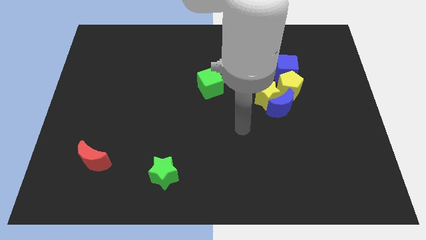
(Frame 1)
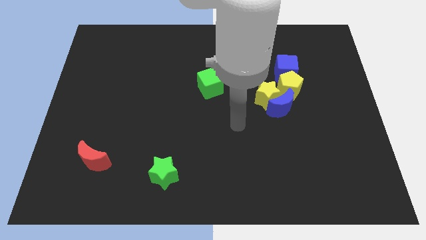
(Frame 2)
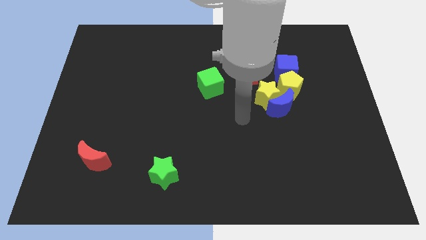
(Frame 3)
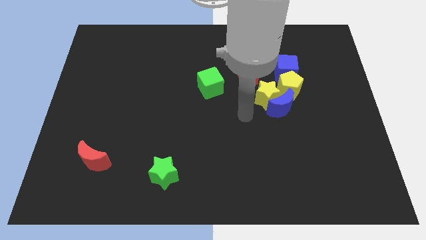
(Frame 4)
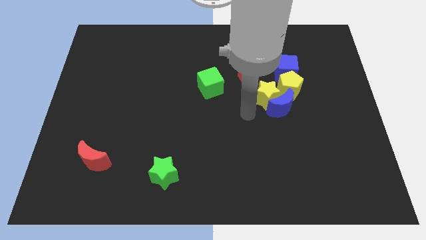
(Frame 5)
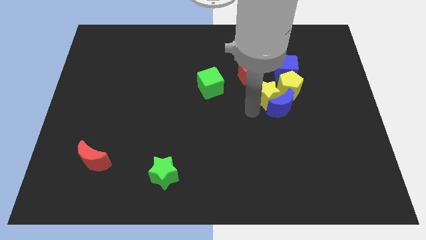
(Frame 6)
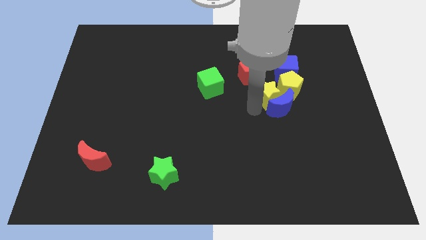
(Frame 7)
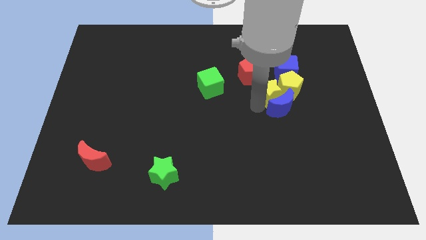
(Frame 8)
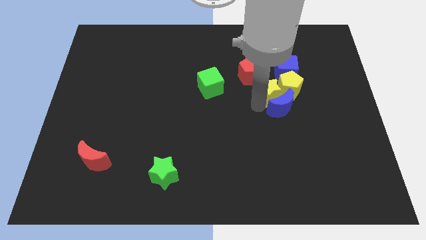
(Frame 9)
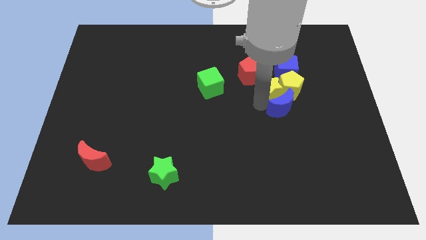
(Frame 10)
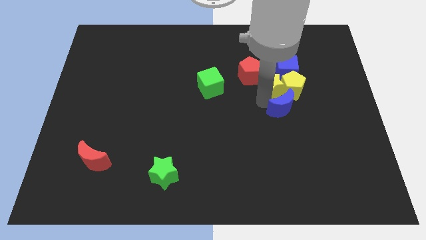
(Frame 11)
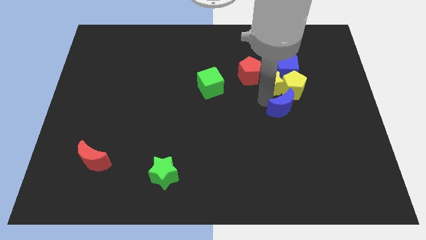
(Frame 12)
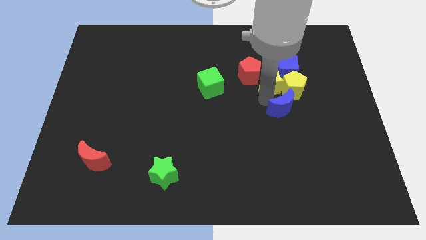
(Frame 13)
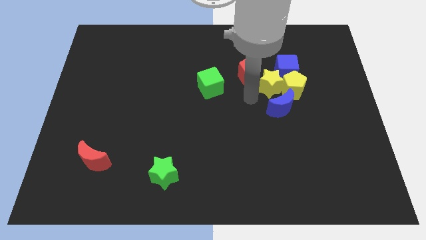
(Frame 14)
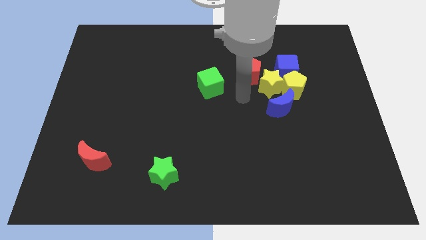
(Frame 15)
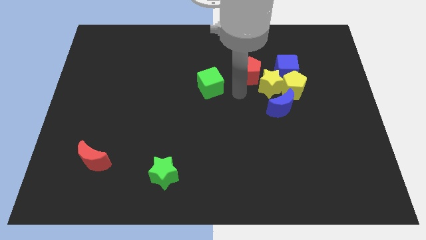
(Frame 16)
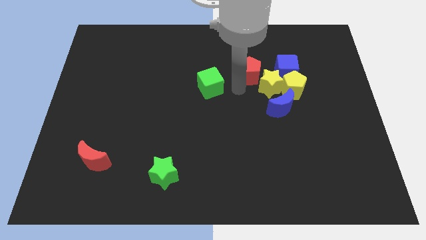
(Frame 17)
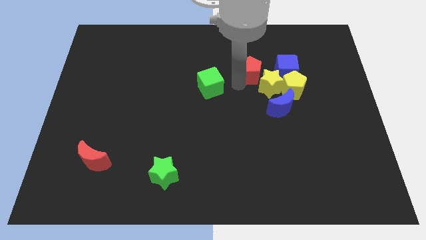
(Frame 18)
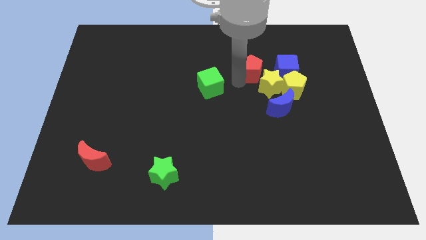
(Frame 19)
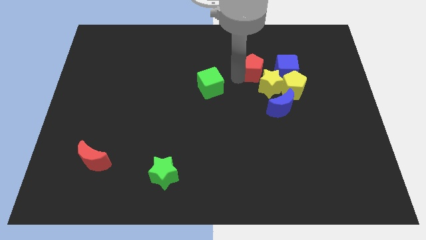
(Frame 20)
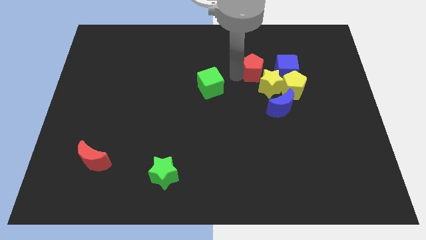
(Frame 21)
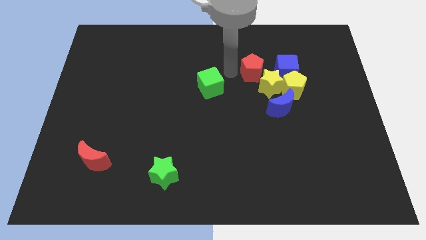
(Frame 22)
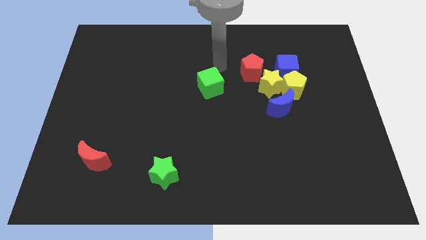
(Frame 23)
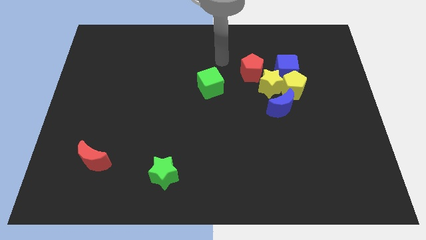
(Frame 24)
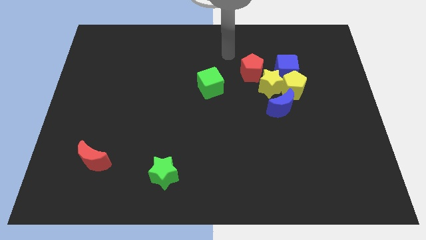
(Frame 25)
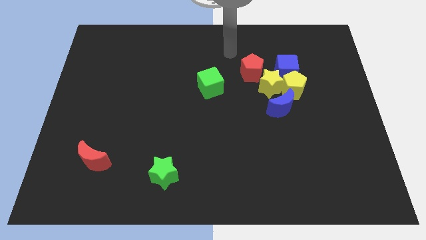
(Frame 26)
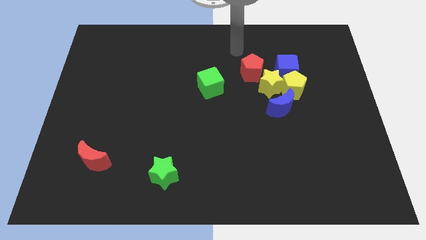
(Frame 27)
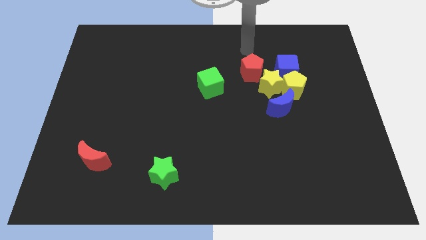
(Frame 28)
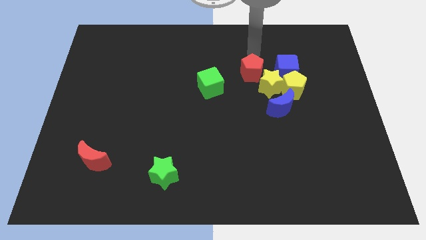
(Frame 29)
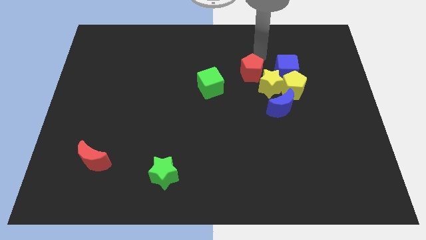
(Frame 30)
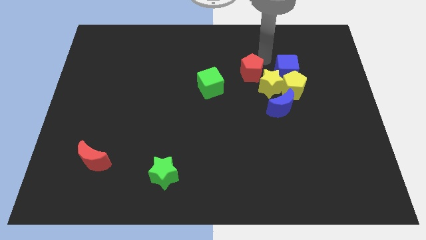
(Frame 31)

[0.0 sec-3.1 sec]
move the arm towards the top right of the red pentagon

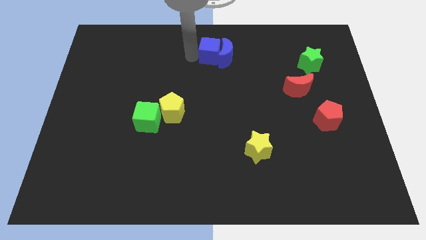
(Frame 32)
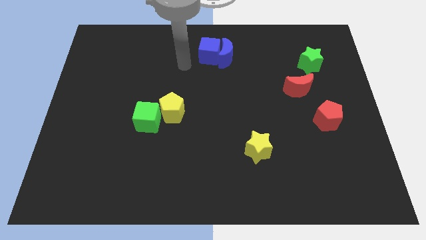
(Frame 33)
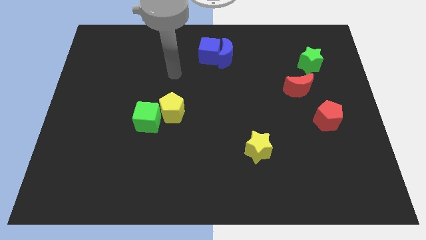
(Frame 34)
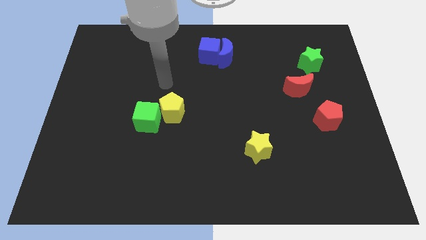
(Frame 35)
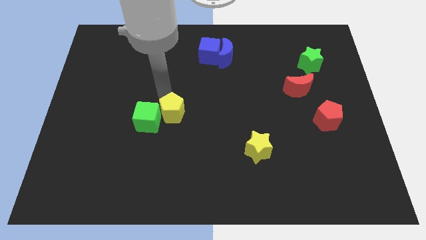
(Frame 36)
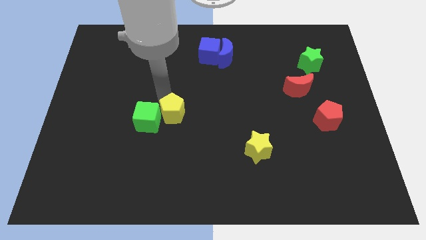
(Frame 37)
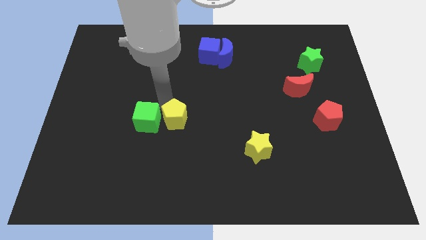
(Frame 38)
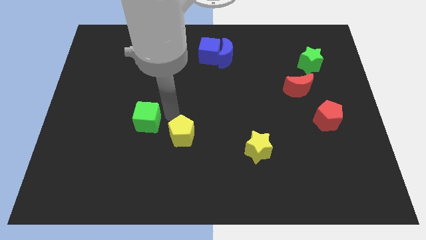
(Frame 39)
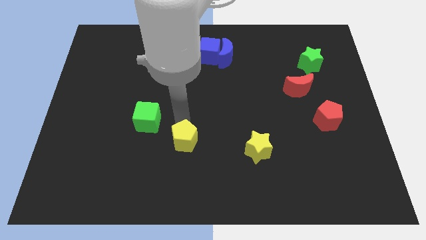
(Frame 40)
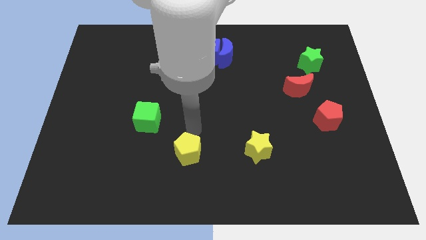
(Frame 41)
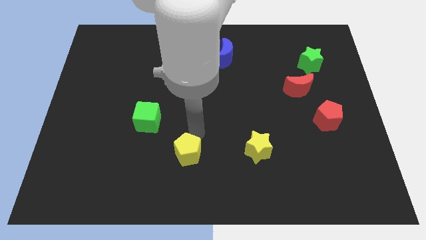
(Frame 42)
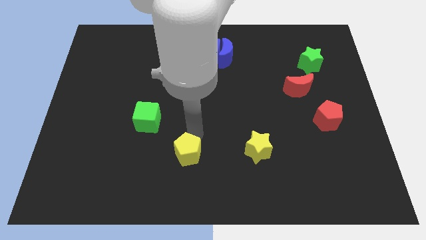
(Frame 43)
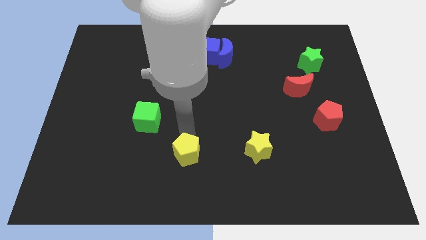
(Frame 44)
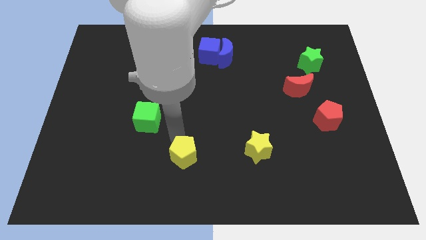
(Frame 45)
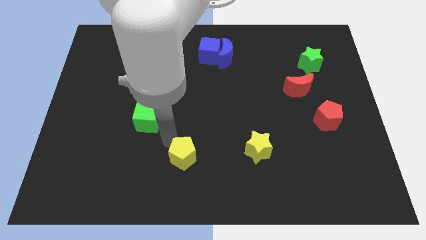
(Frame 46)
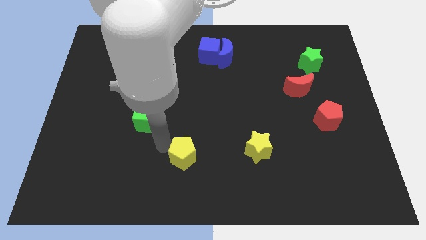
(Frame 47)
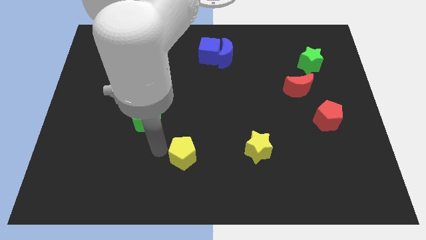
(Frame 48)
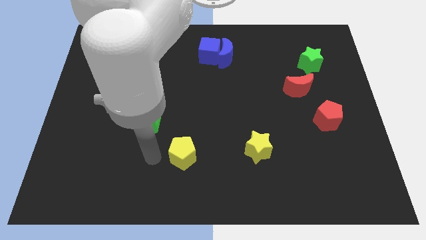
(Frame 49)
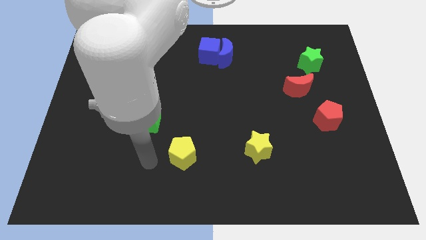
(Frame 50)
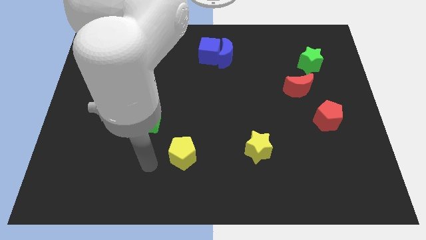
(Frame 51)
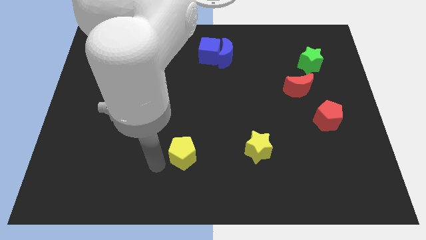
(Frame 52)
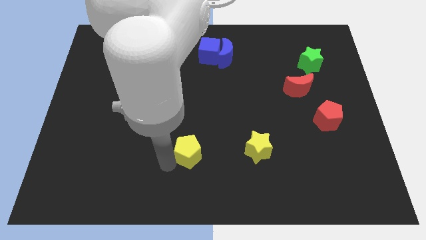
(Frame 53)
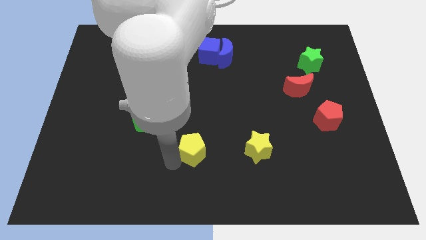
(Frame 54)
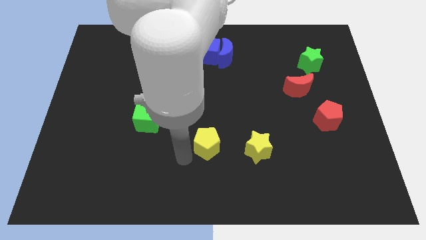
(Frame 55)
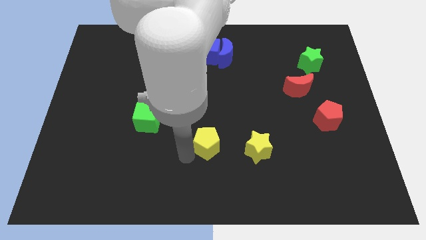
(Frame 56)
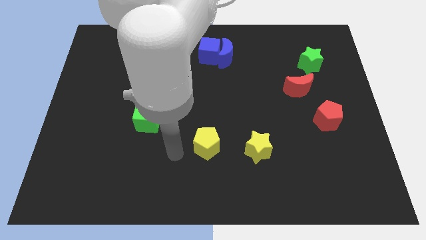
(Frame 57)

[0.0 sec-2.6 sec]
move the yellow pentagon to the left of the yellow star

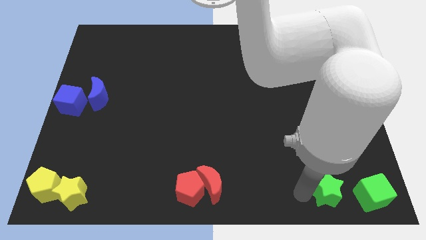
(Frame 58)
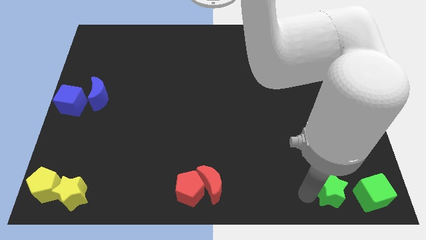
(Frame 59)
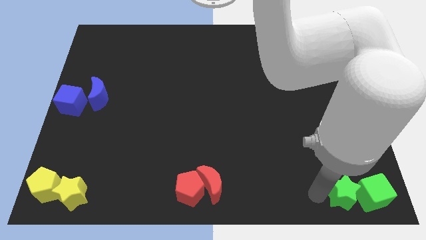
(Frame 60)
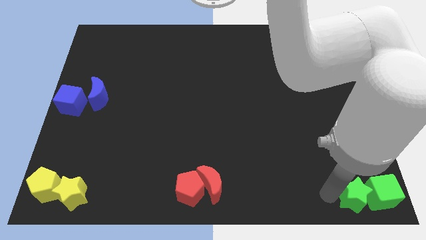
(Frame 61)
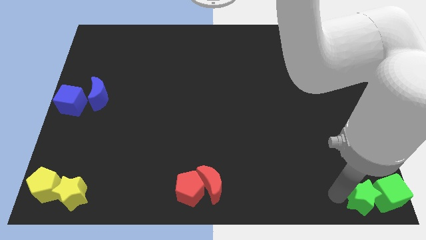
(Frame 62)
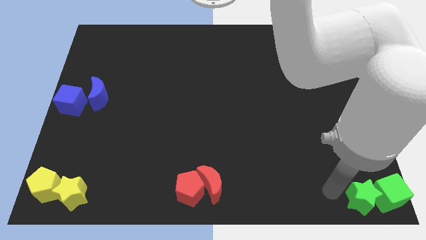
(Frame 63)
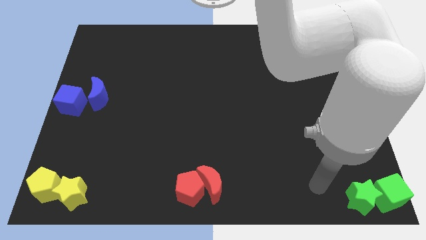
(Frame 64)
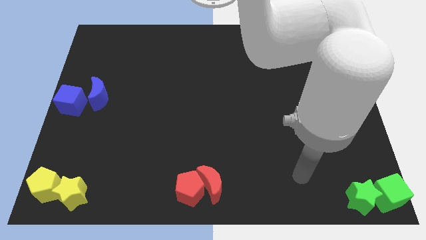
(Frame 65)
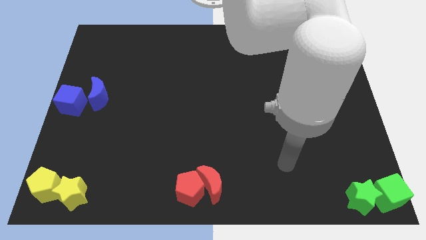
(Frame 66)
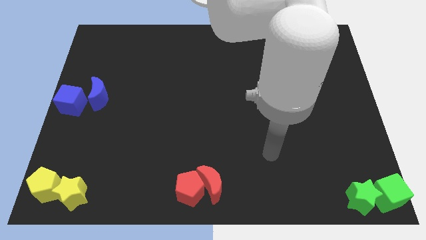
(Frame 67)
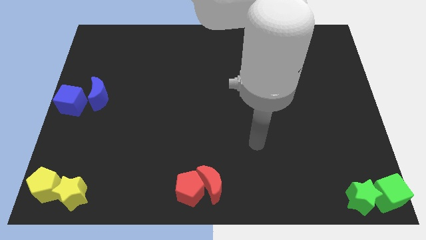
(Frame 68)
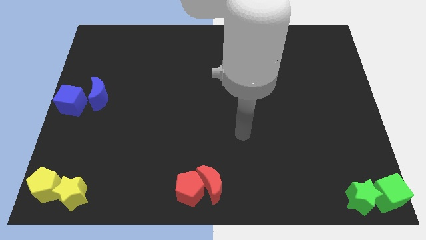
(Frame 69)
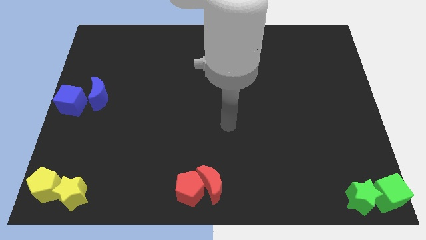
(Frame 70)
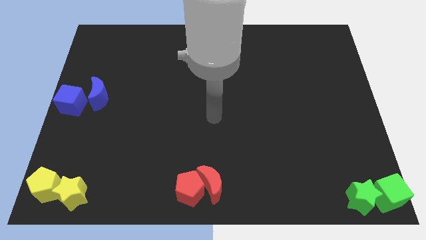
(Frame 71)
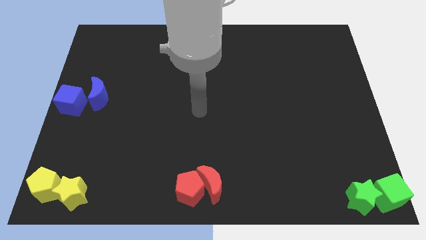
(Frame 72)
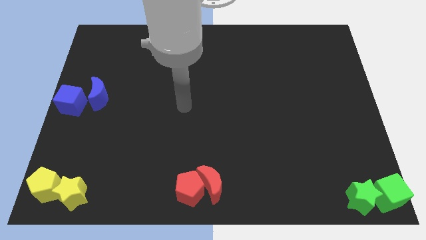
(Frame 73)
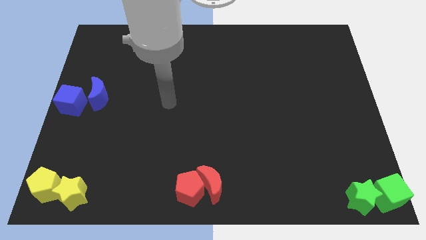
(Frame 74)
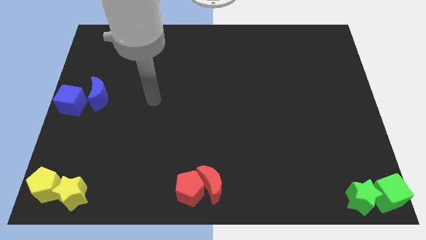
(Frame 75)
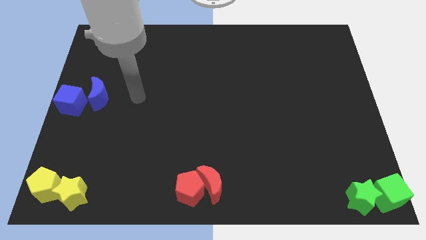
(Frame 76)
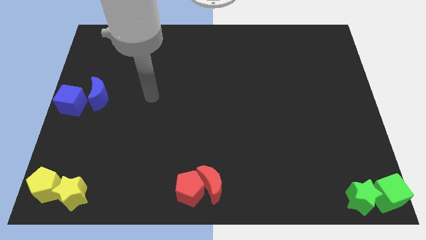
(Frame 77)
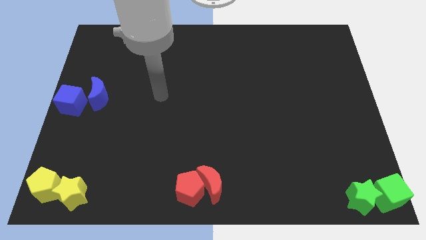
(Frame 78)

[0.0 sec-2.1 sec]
put the green blocks together

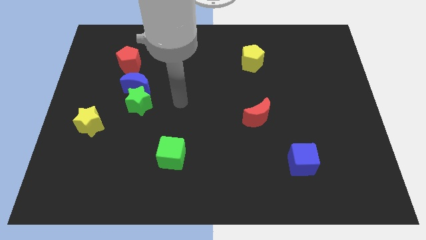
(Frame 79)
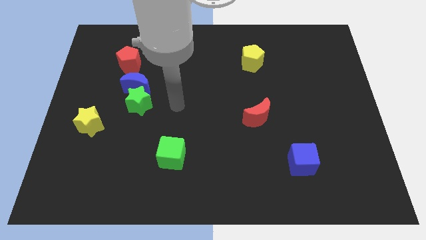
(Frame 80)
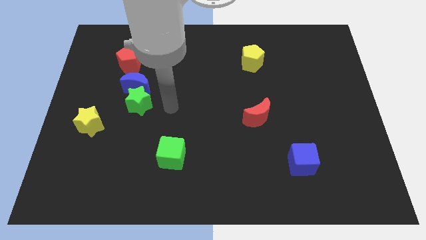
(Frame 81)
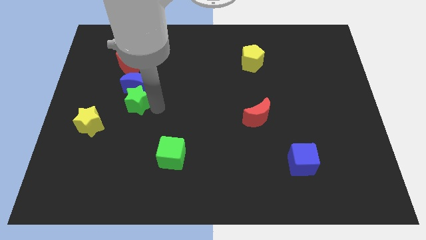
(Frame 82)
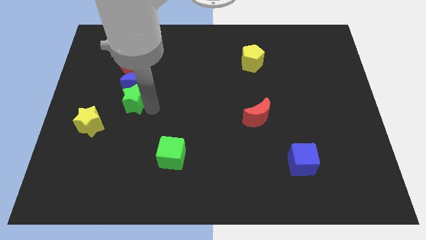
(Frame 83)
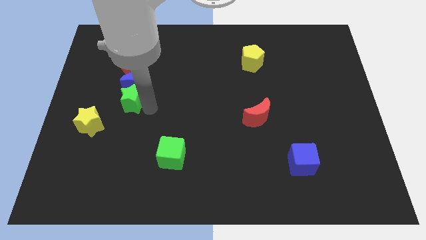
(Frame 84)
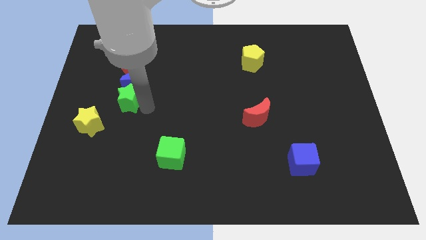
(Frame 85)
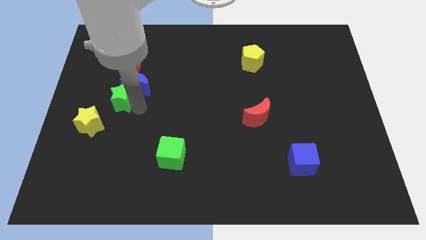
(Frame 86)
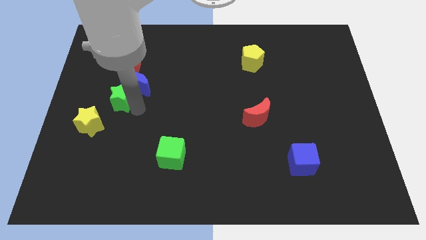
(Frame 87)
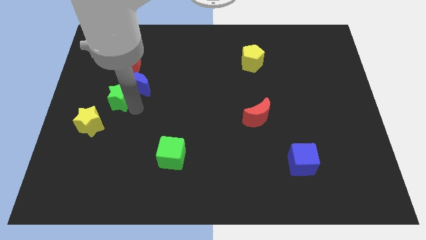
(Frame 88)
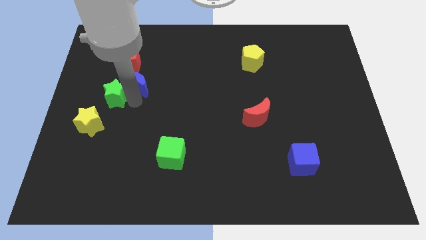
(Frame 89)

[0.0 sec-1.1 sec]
slightly push the green star towards the left side of the board
